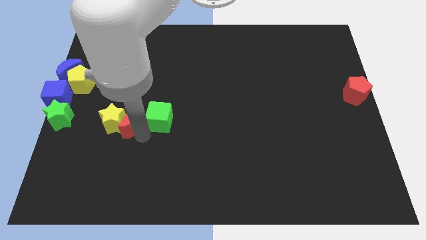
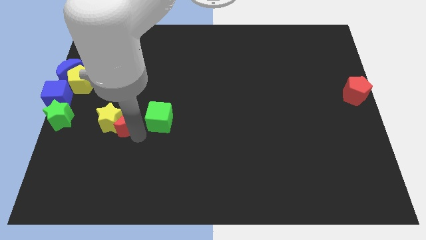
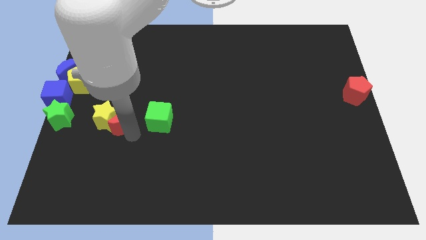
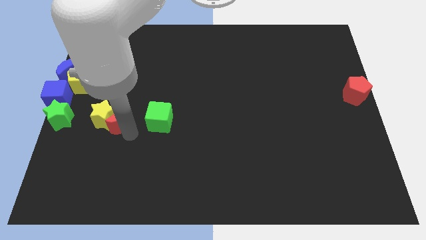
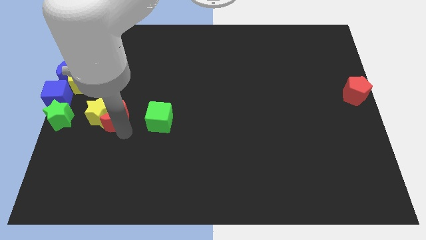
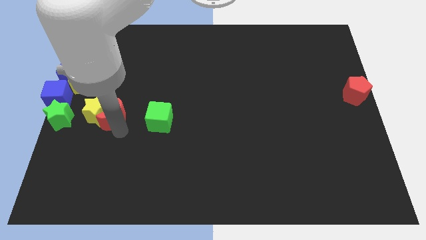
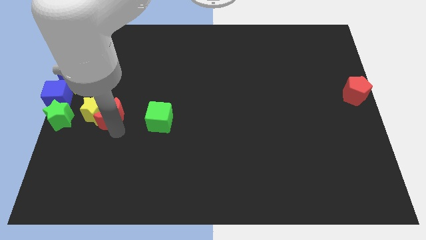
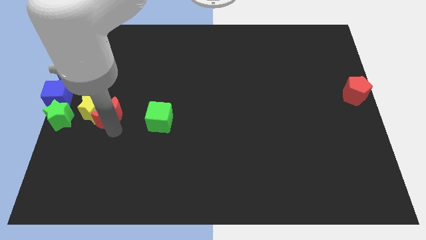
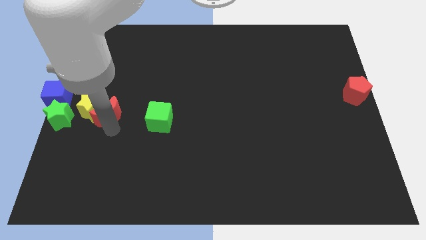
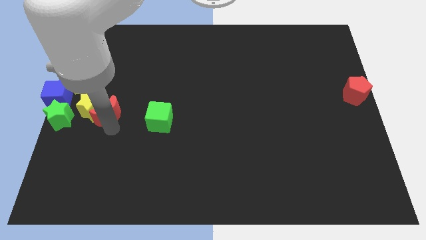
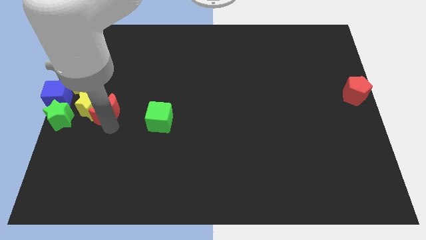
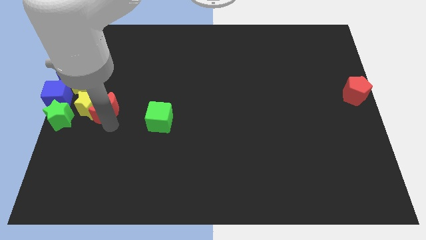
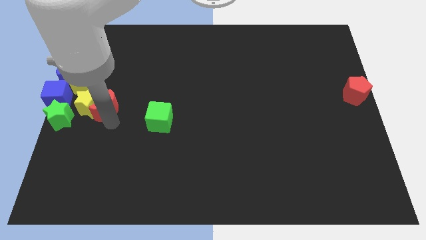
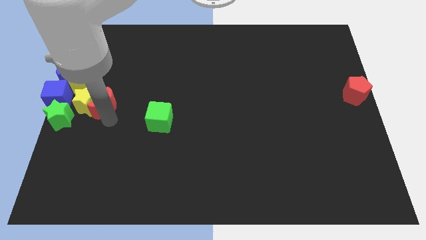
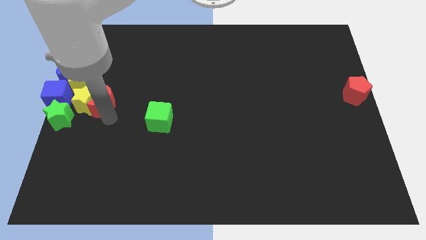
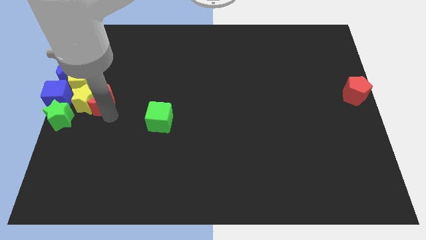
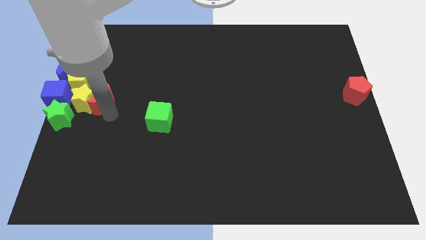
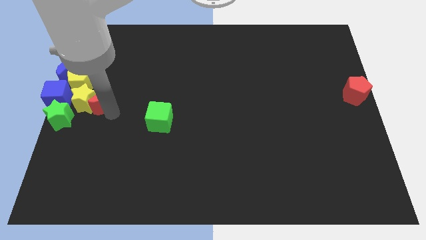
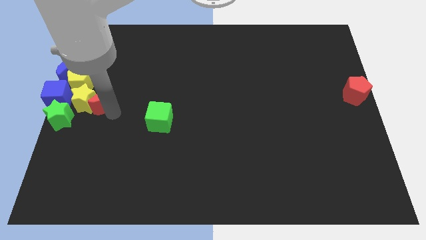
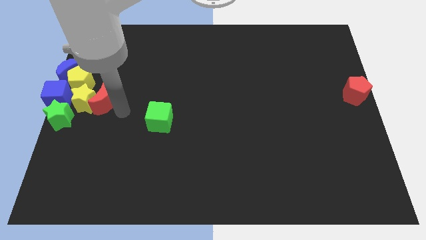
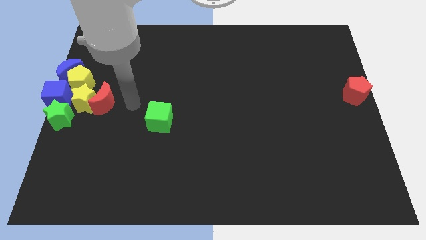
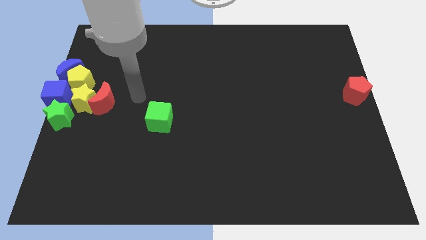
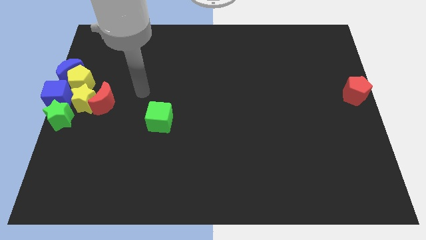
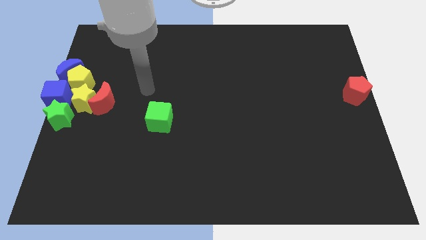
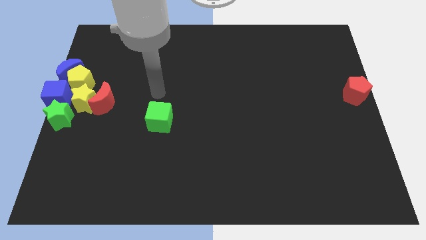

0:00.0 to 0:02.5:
push the red moon along with the yellow star to the center left of the board

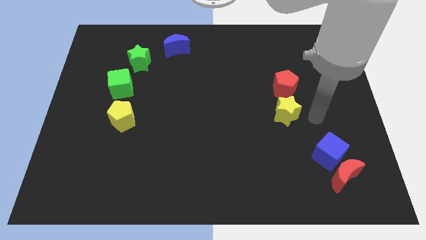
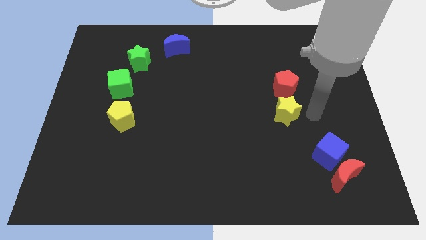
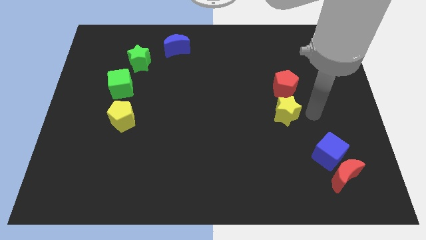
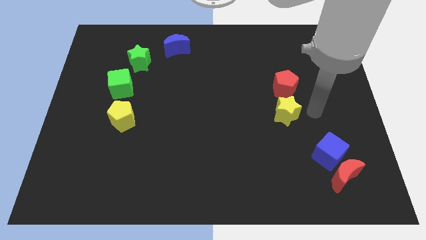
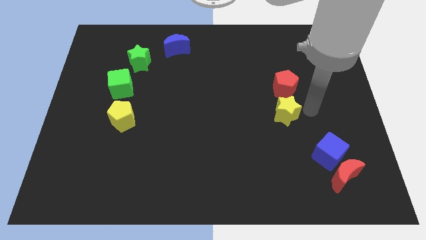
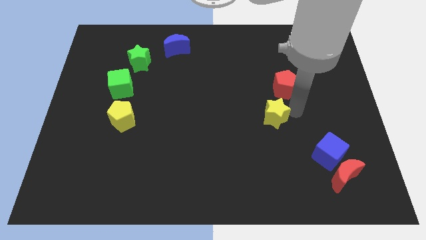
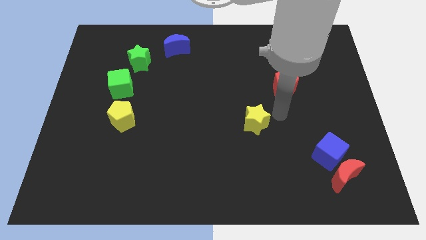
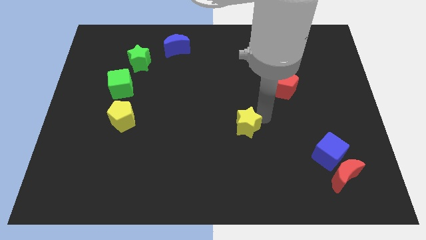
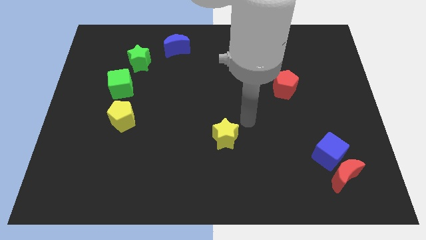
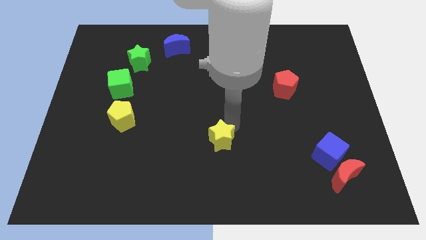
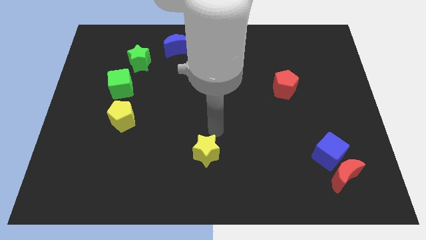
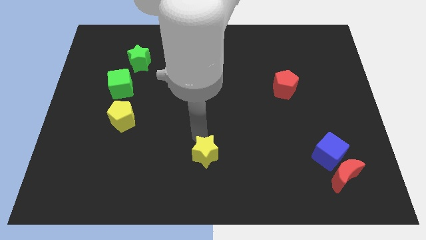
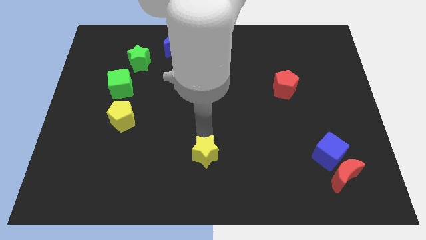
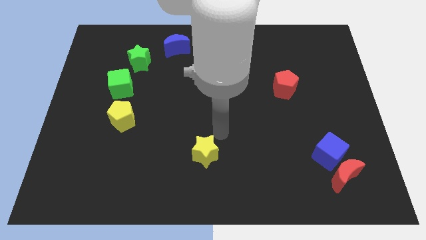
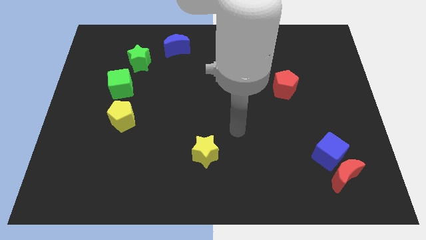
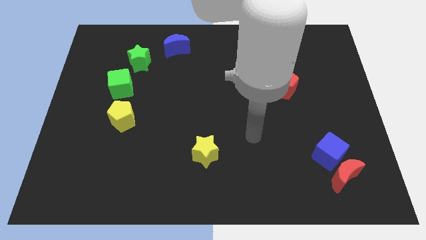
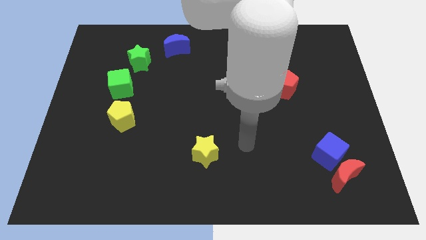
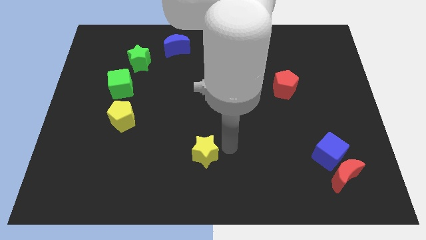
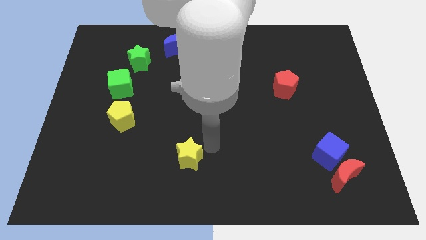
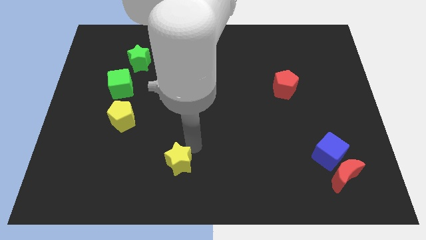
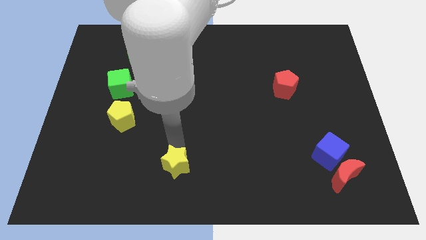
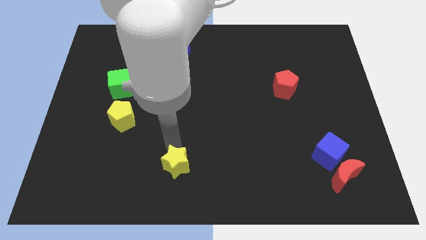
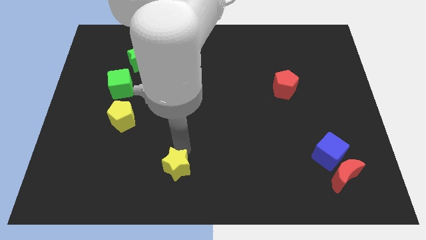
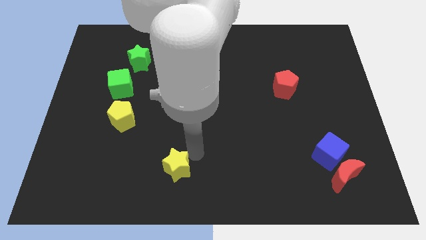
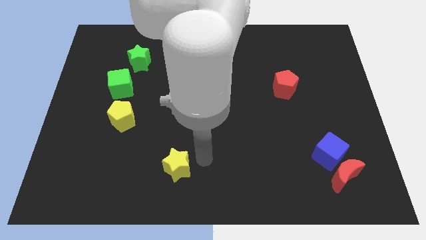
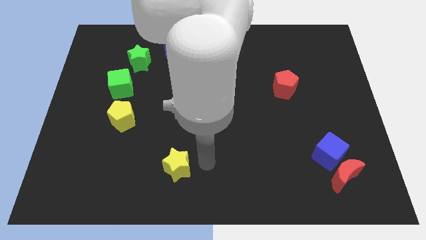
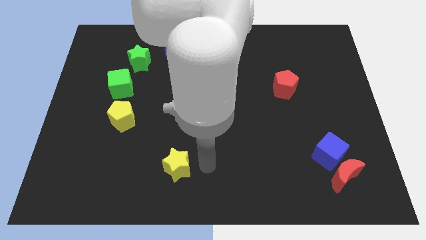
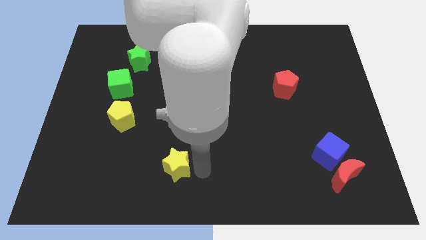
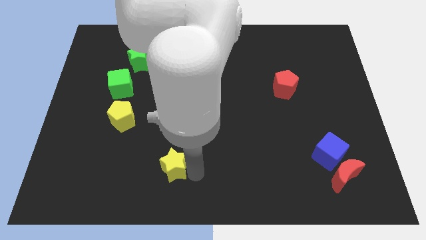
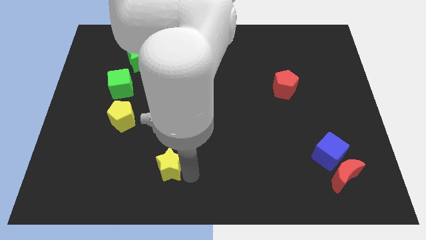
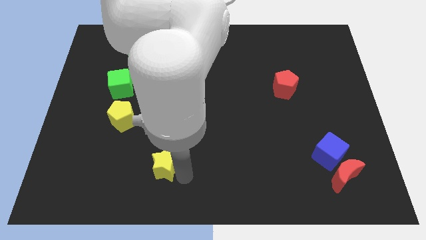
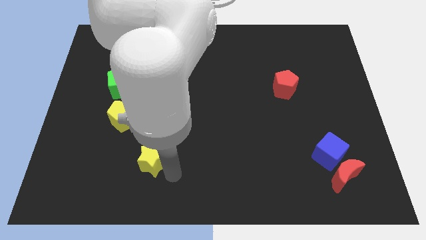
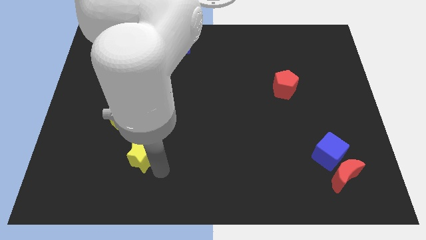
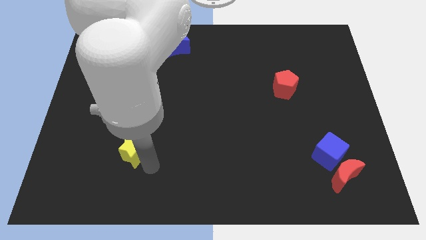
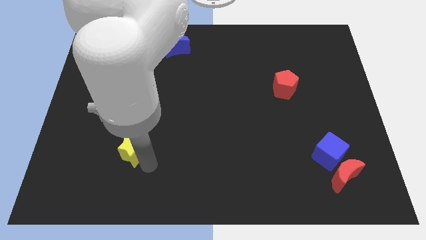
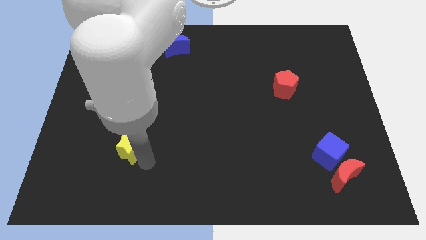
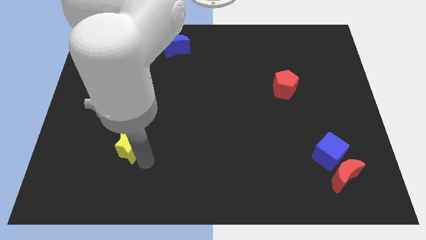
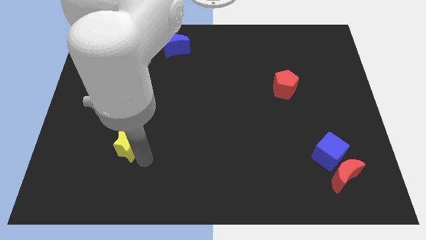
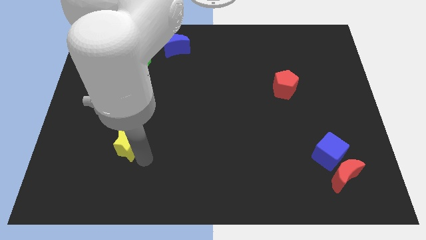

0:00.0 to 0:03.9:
drag yellow star towards yellow pentagon

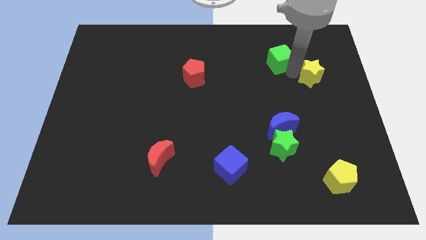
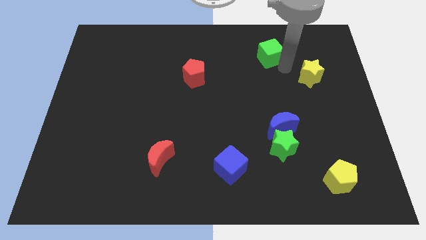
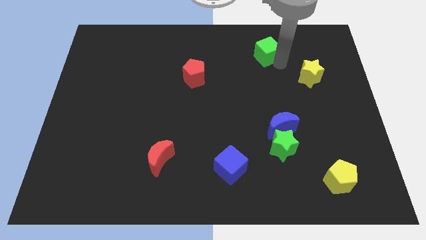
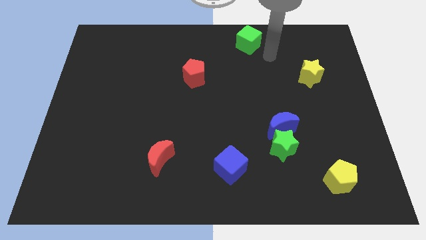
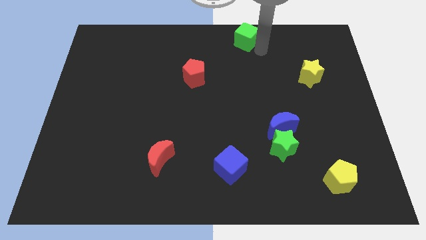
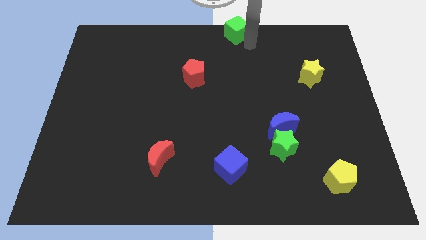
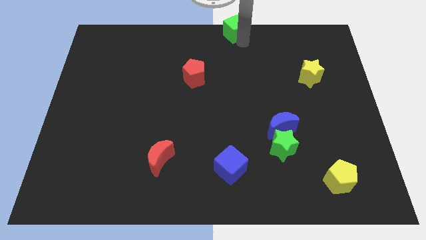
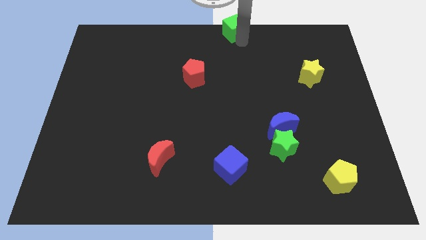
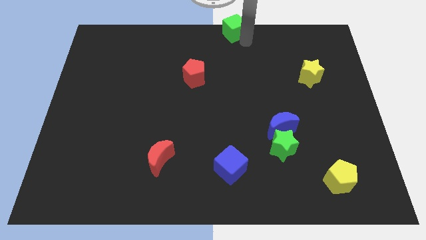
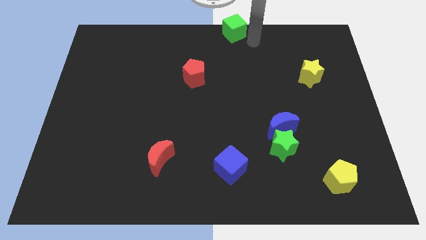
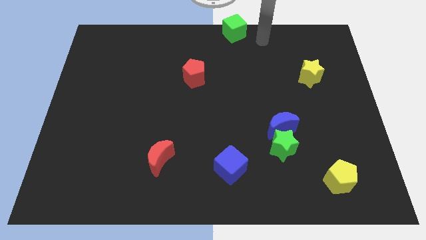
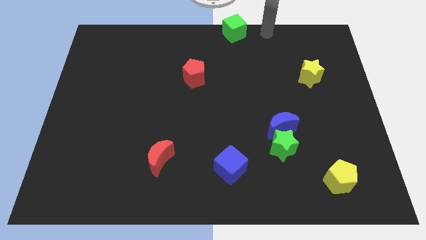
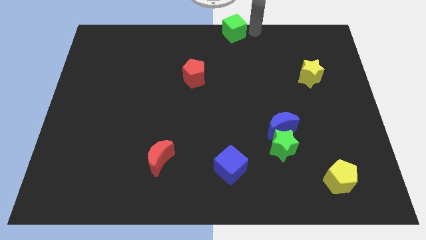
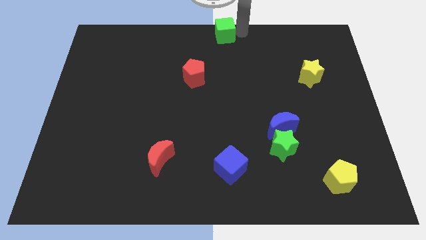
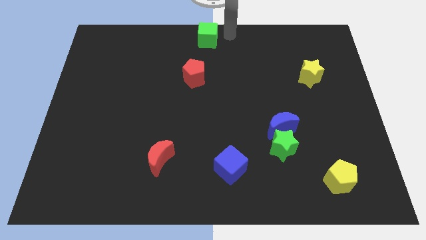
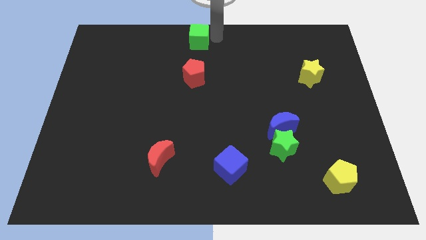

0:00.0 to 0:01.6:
push the green cube above the red pentagon

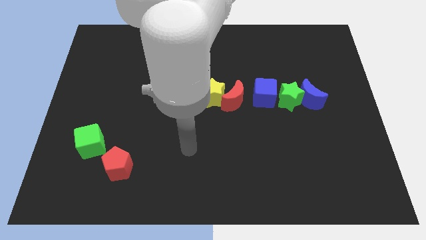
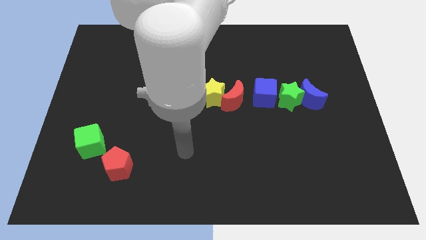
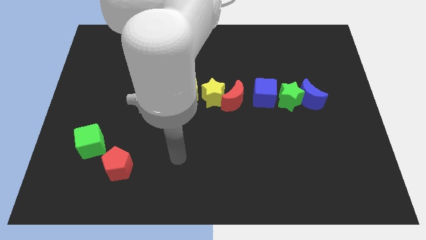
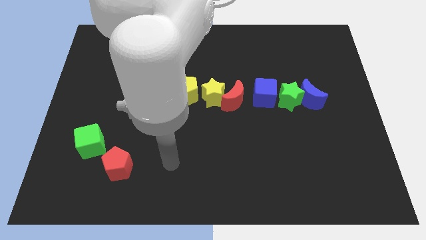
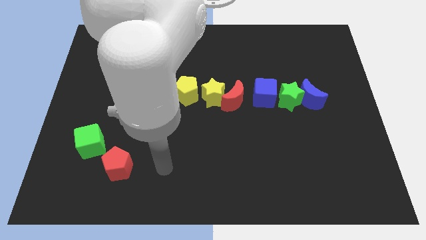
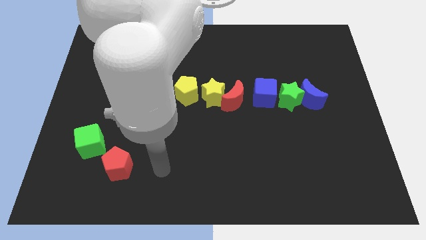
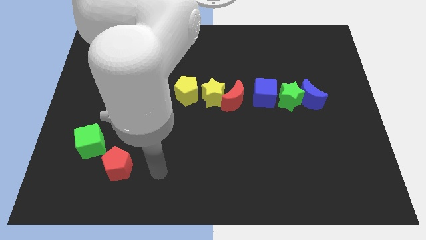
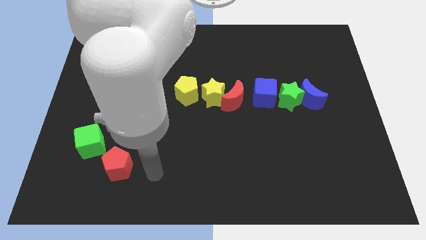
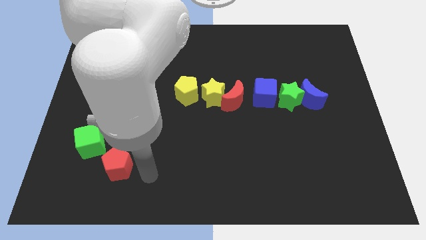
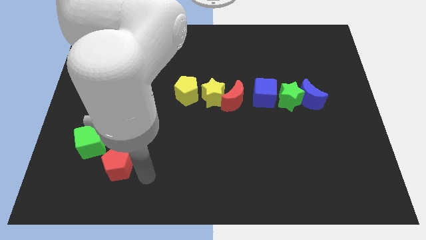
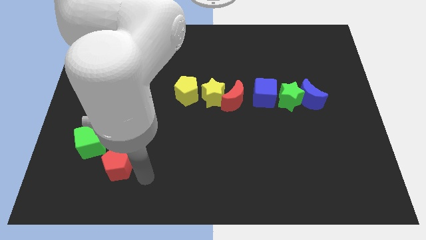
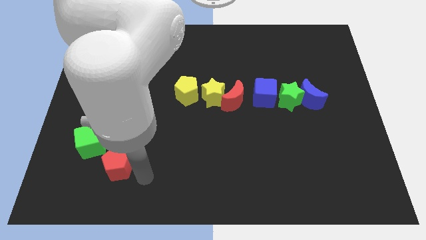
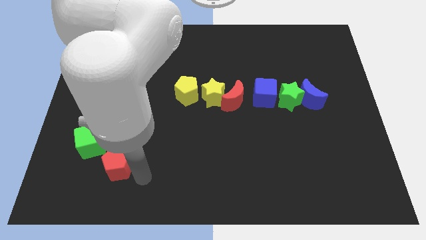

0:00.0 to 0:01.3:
point your arm at the bottom right side of red pentagon
